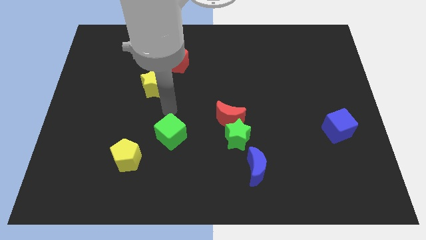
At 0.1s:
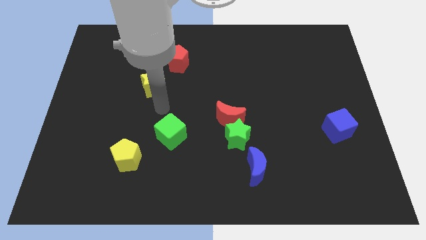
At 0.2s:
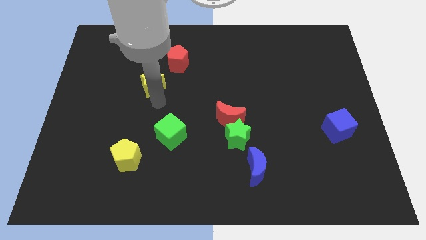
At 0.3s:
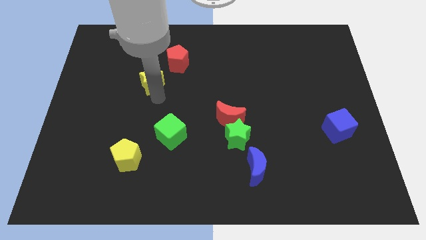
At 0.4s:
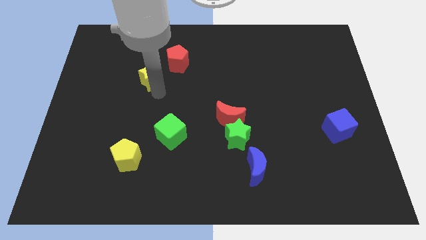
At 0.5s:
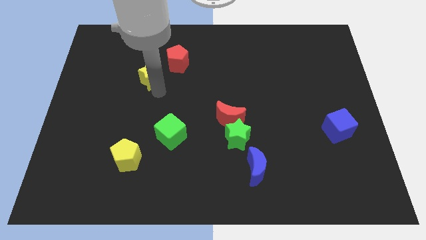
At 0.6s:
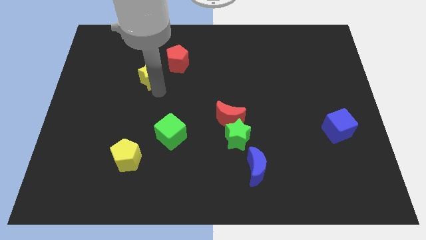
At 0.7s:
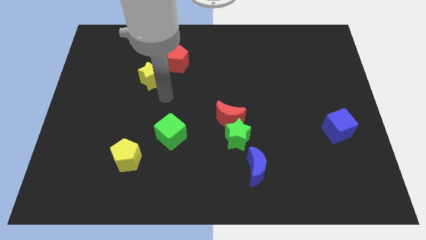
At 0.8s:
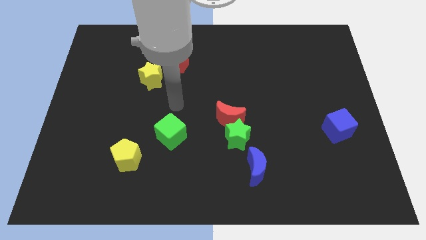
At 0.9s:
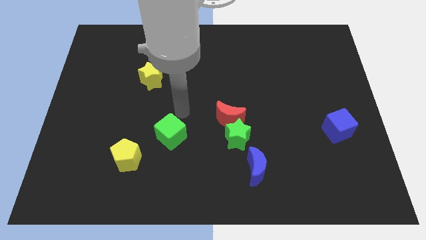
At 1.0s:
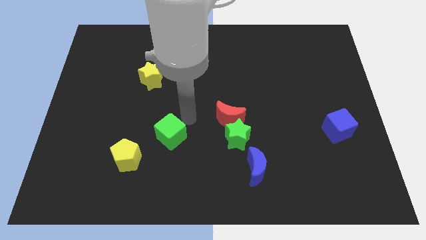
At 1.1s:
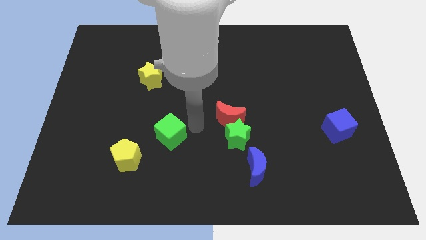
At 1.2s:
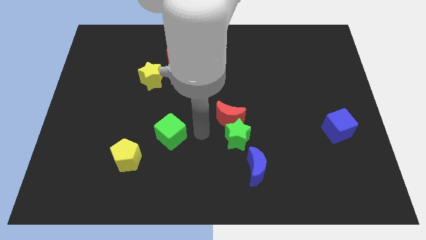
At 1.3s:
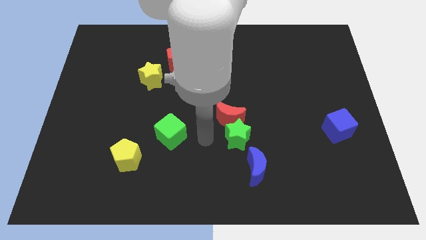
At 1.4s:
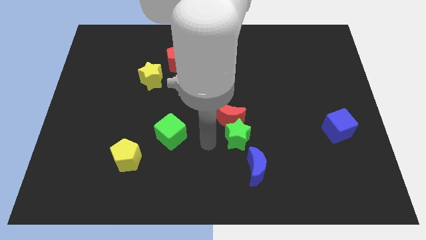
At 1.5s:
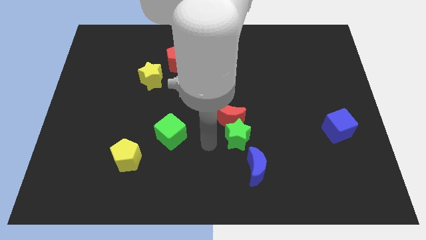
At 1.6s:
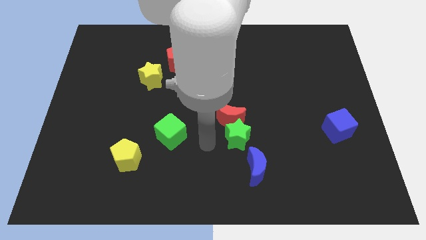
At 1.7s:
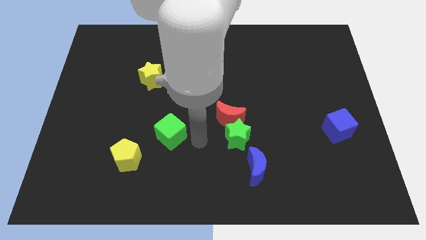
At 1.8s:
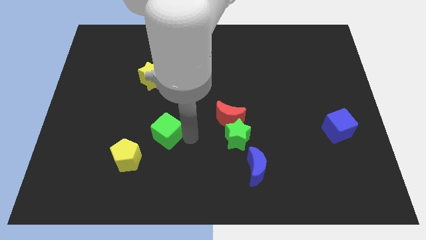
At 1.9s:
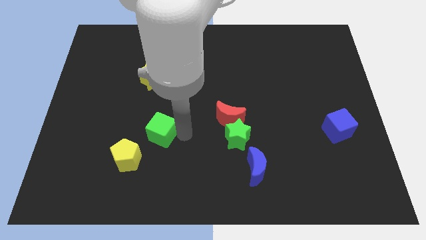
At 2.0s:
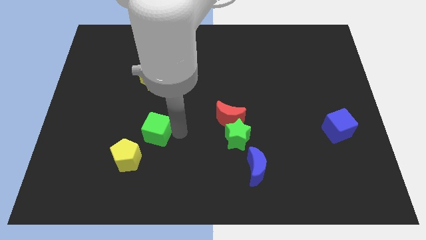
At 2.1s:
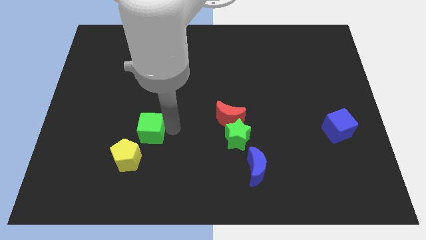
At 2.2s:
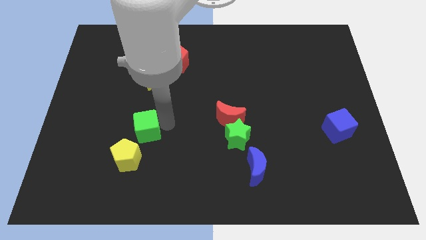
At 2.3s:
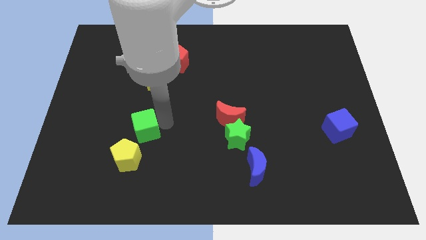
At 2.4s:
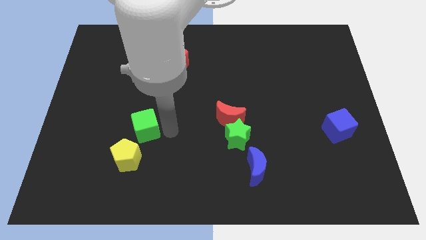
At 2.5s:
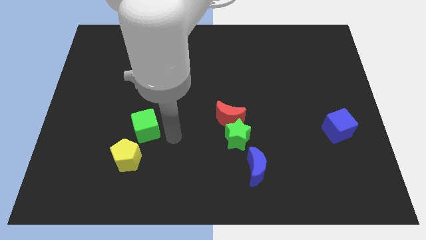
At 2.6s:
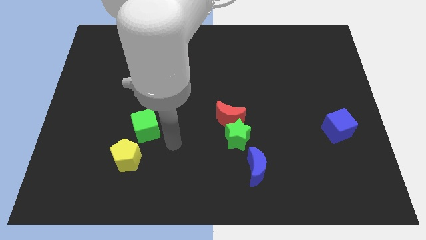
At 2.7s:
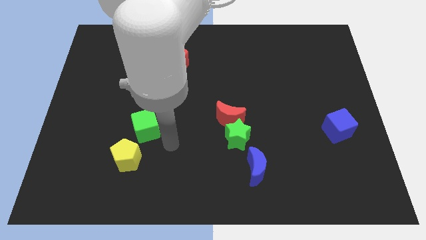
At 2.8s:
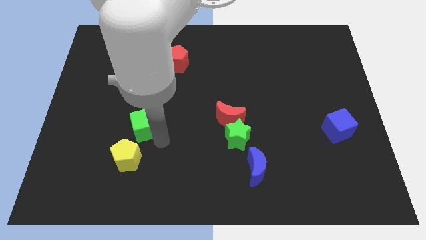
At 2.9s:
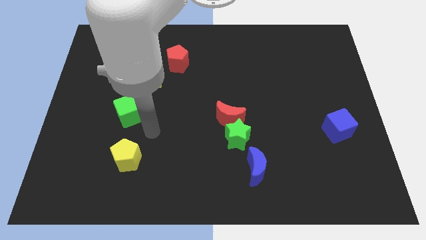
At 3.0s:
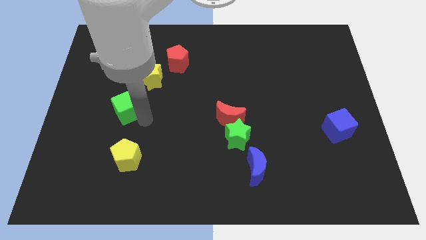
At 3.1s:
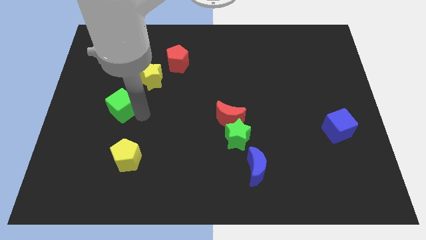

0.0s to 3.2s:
push green cube above yellow pentagon

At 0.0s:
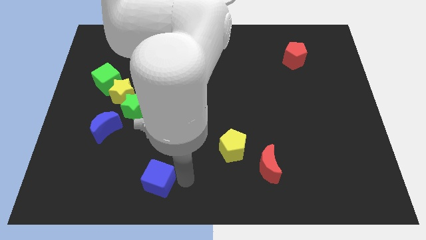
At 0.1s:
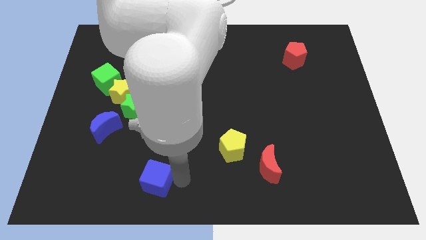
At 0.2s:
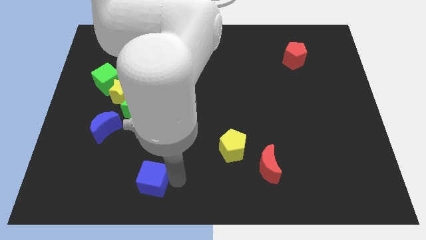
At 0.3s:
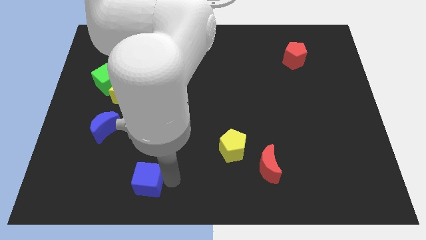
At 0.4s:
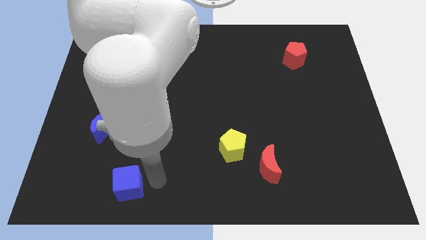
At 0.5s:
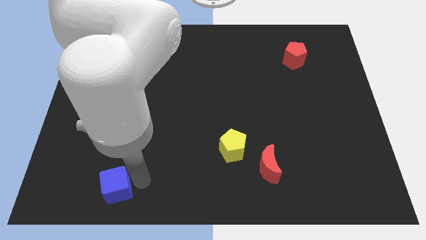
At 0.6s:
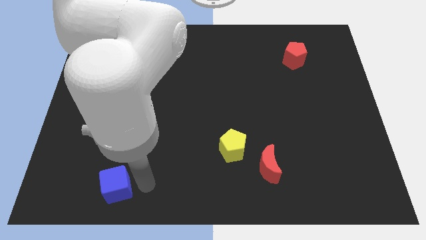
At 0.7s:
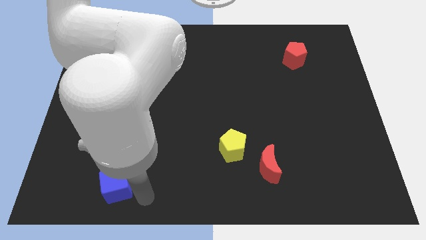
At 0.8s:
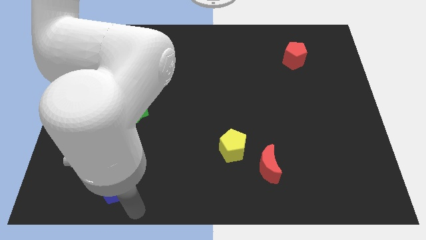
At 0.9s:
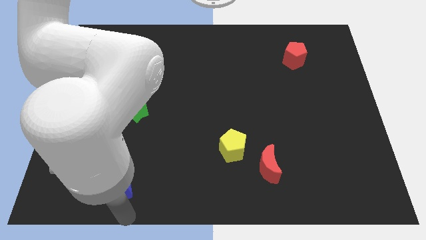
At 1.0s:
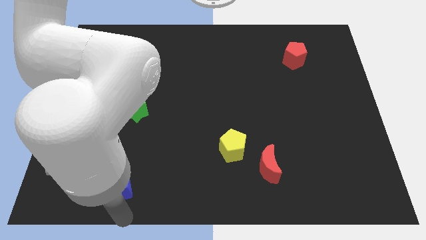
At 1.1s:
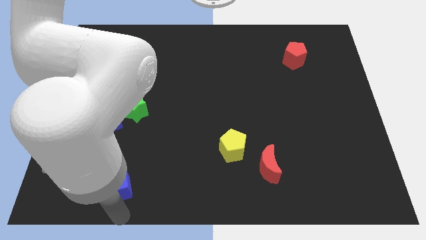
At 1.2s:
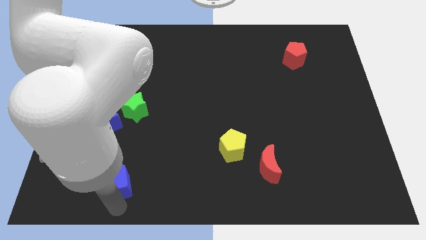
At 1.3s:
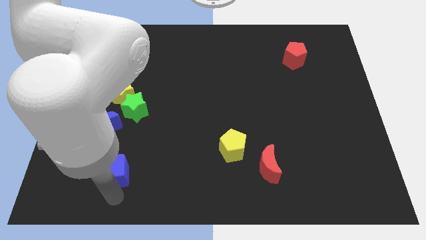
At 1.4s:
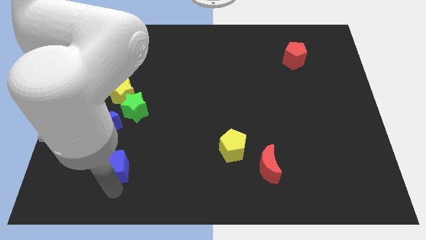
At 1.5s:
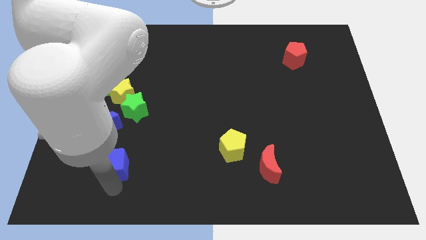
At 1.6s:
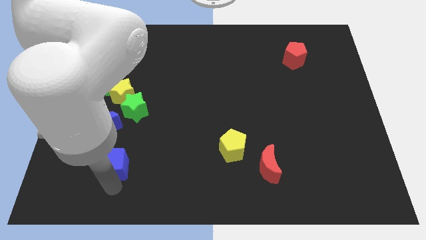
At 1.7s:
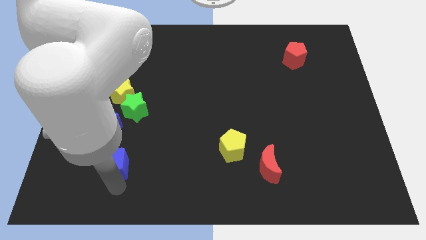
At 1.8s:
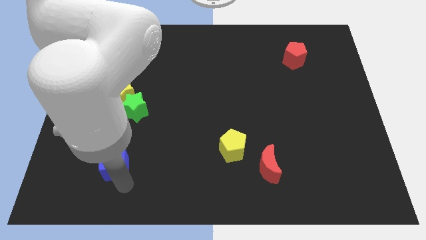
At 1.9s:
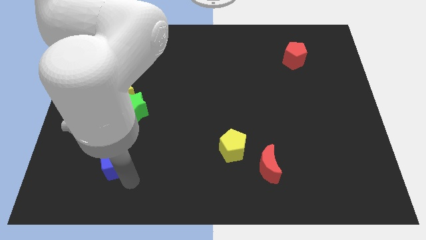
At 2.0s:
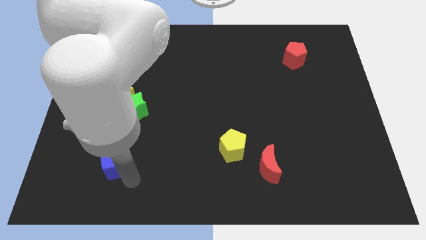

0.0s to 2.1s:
push blue cube towards blue moon

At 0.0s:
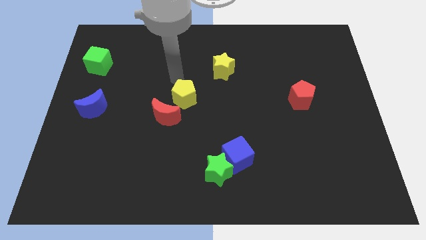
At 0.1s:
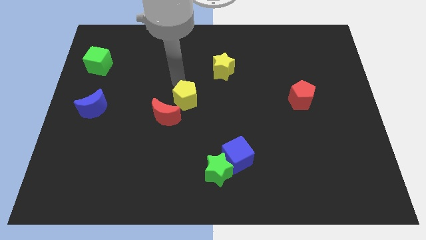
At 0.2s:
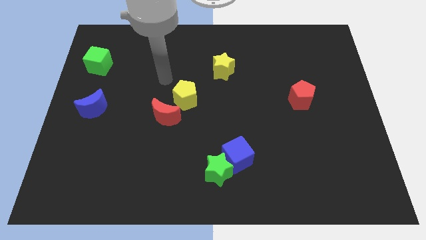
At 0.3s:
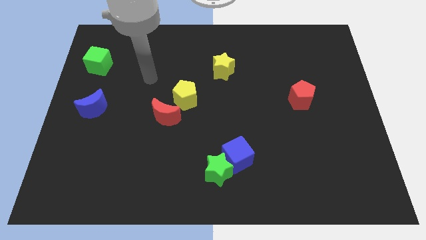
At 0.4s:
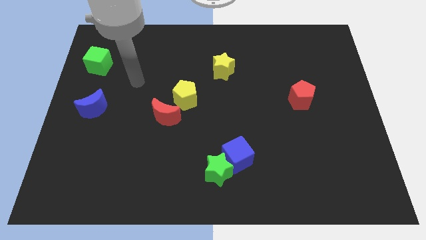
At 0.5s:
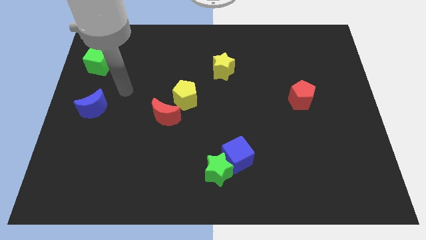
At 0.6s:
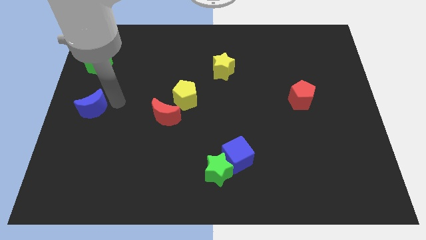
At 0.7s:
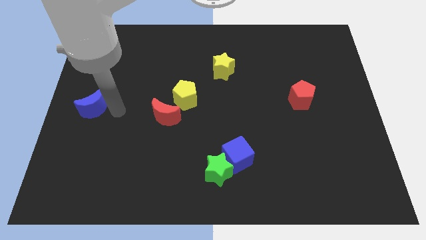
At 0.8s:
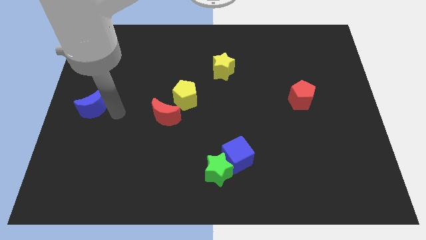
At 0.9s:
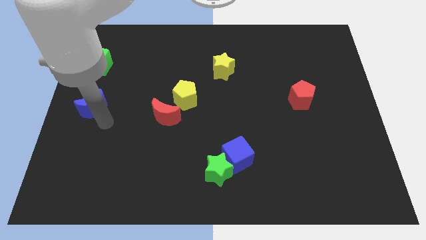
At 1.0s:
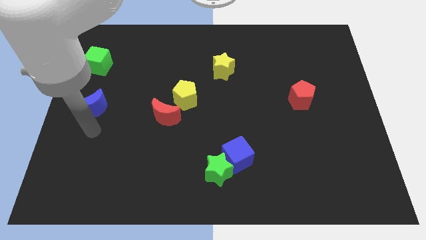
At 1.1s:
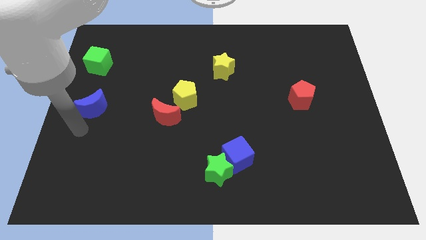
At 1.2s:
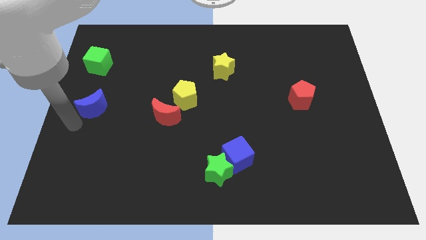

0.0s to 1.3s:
move your arm away from the yellow pentagon

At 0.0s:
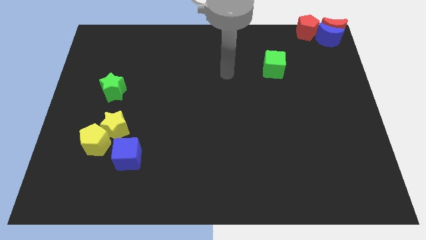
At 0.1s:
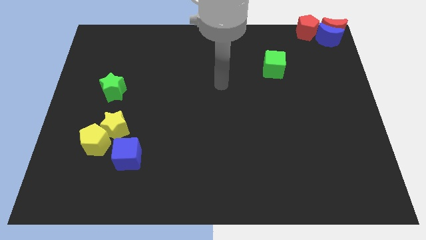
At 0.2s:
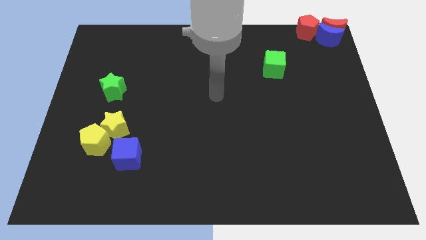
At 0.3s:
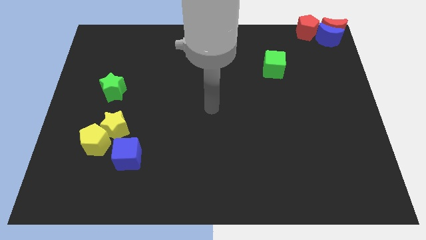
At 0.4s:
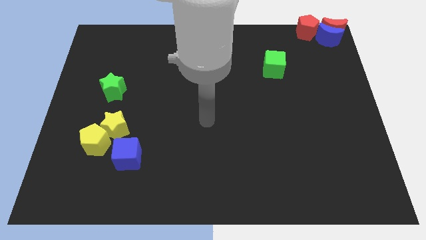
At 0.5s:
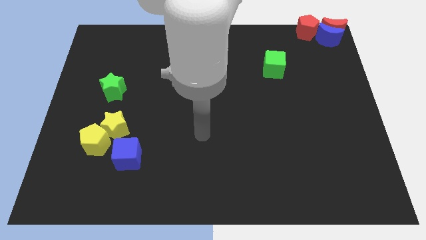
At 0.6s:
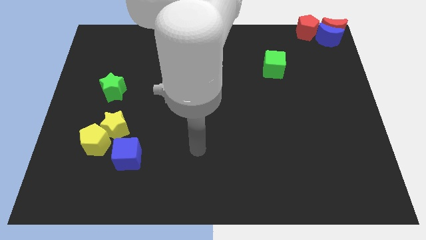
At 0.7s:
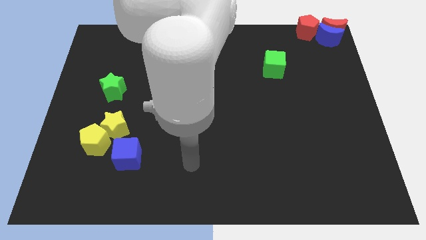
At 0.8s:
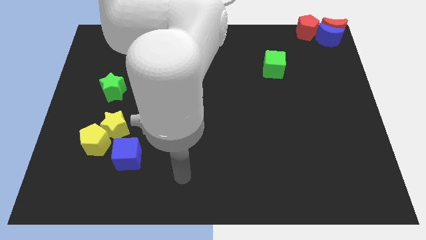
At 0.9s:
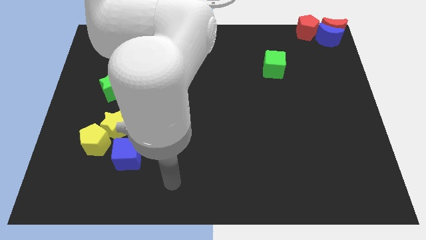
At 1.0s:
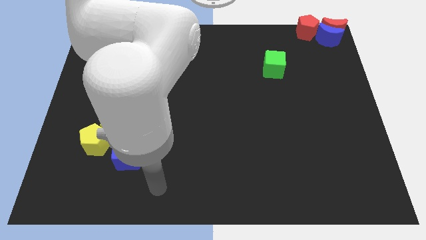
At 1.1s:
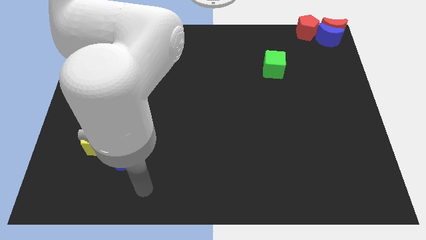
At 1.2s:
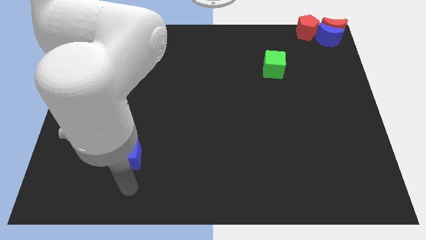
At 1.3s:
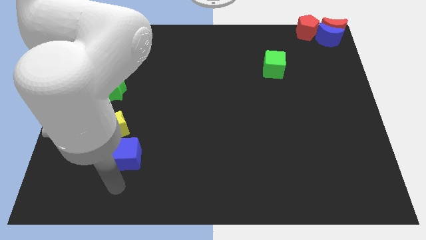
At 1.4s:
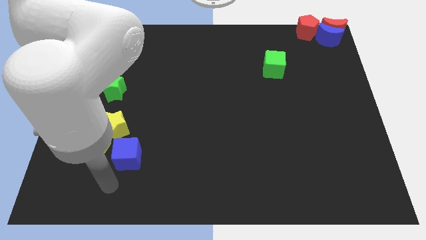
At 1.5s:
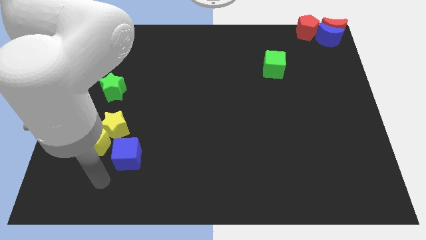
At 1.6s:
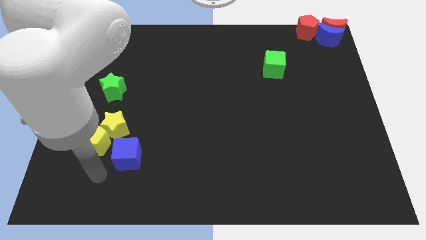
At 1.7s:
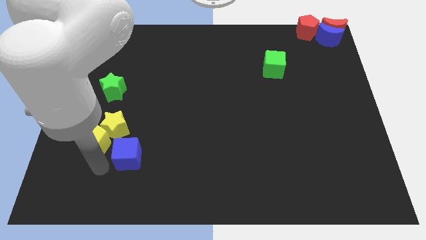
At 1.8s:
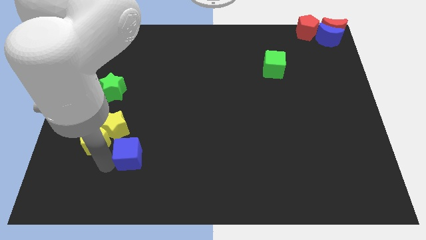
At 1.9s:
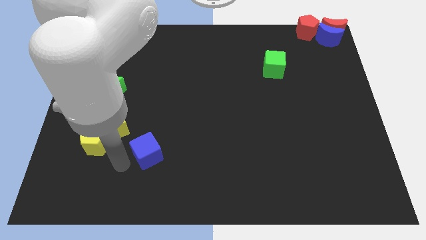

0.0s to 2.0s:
move your arm into the blue cube

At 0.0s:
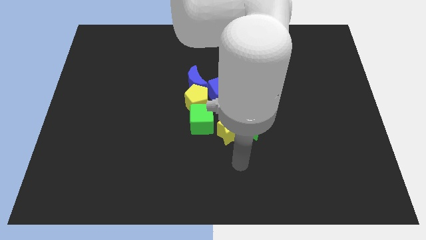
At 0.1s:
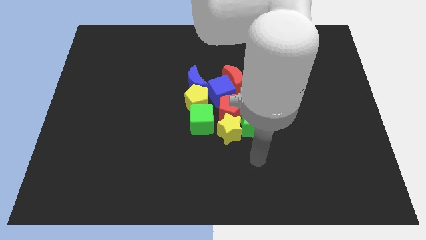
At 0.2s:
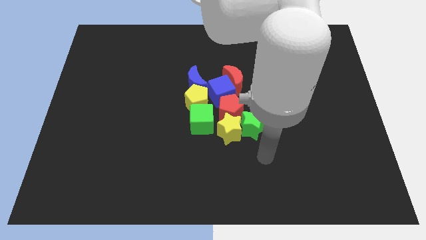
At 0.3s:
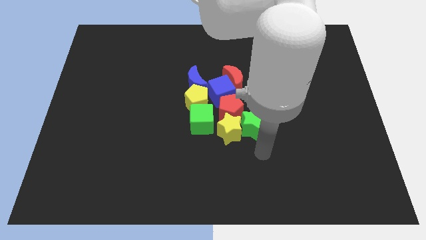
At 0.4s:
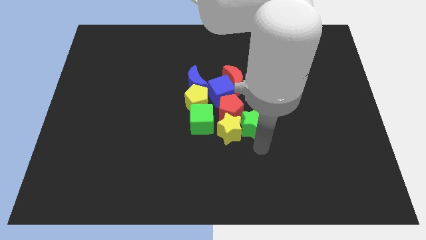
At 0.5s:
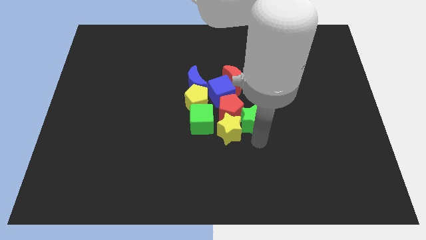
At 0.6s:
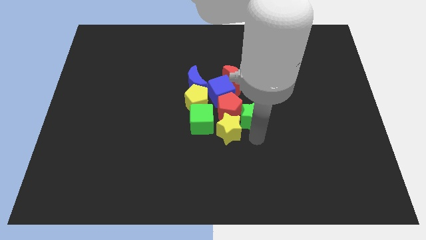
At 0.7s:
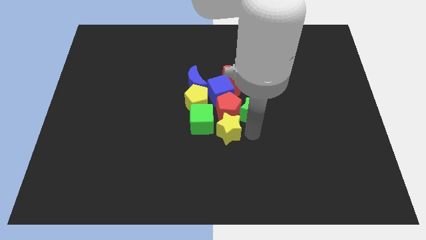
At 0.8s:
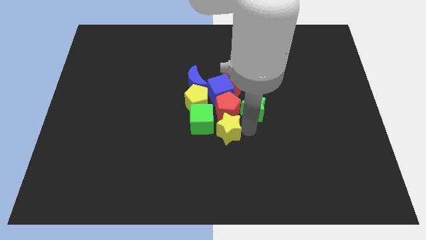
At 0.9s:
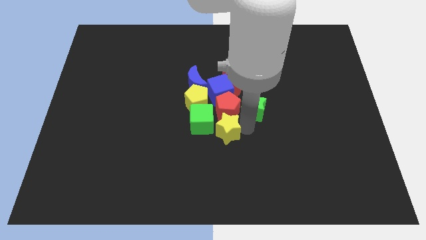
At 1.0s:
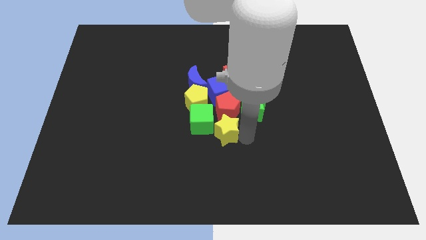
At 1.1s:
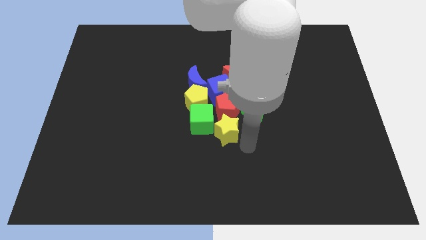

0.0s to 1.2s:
push the green star to the right side of the red pentagon
